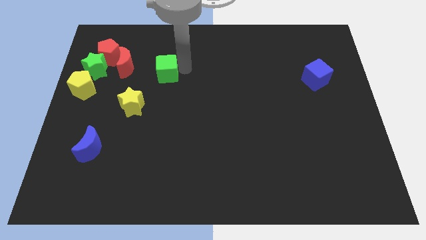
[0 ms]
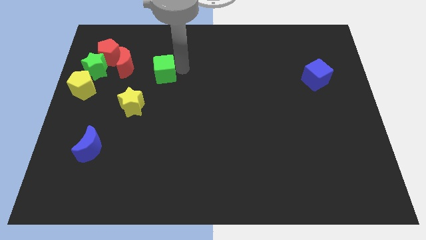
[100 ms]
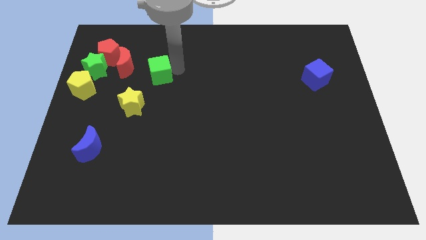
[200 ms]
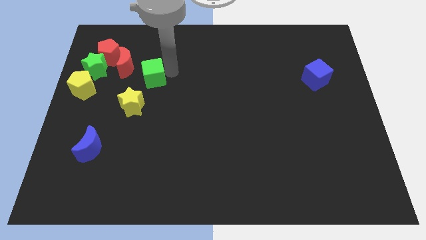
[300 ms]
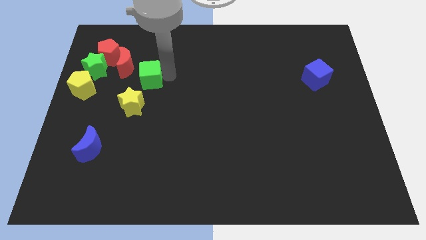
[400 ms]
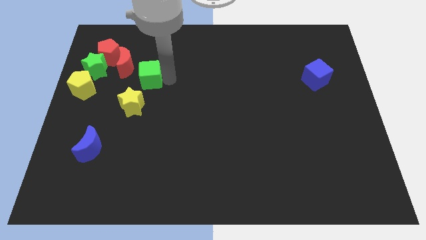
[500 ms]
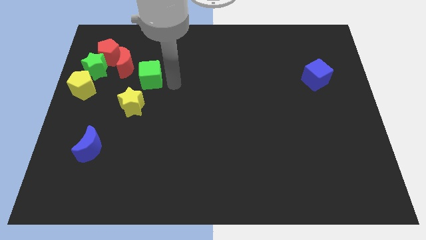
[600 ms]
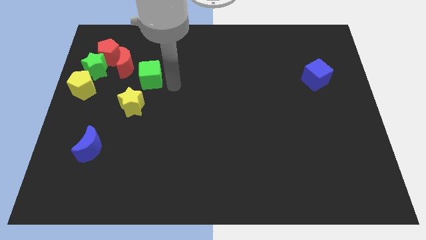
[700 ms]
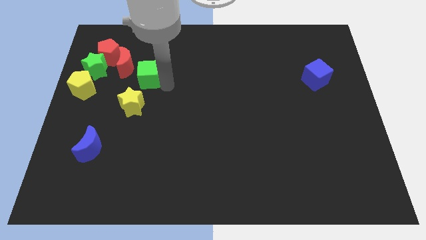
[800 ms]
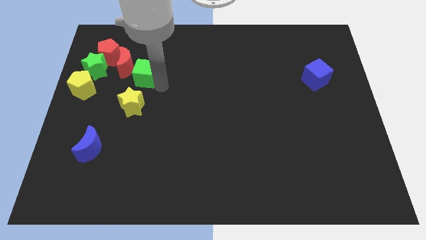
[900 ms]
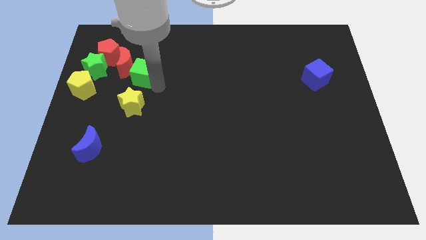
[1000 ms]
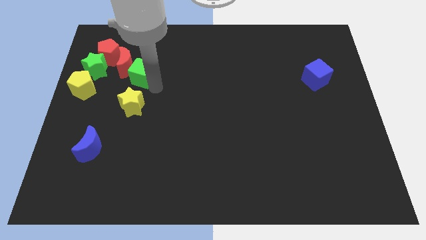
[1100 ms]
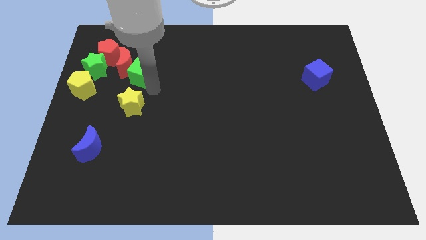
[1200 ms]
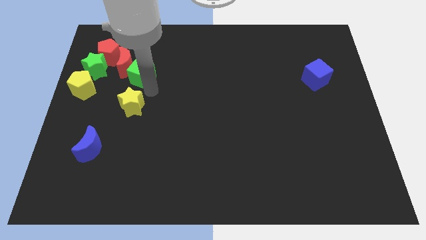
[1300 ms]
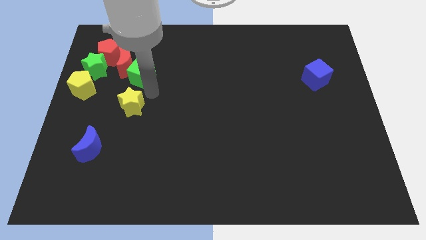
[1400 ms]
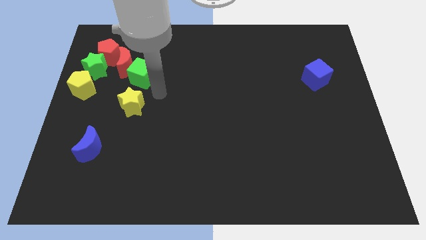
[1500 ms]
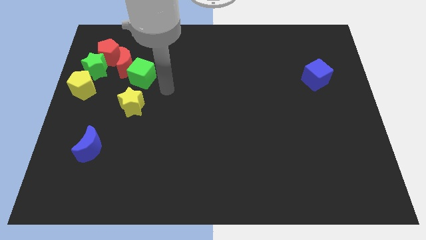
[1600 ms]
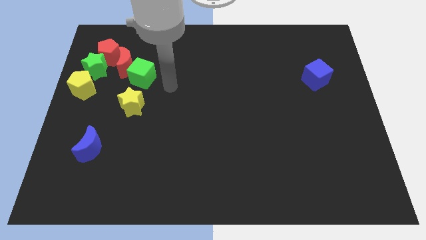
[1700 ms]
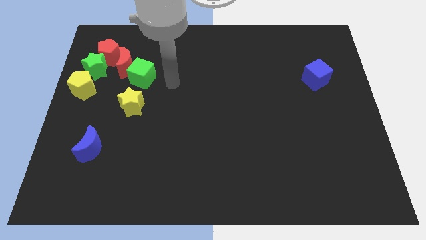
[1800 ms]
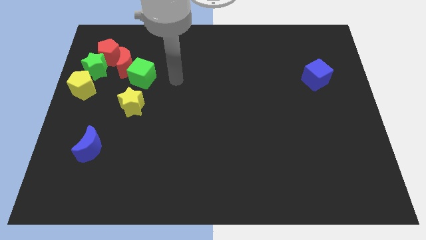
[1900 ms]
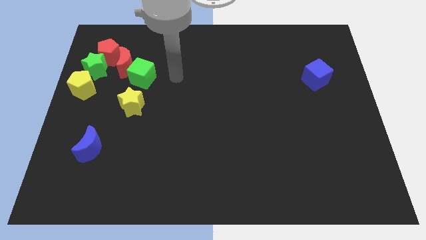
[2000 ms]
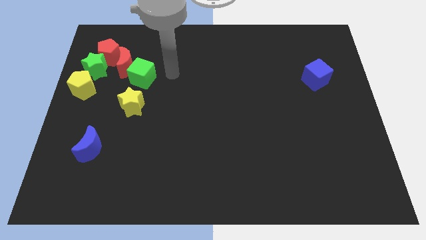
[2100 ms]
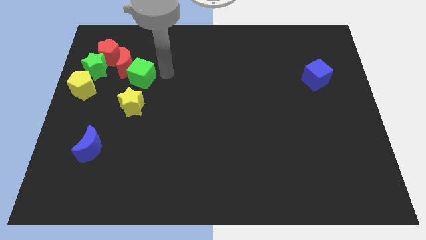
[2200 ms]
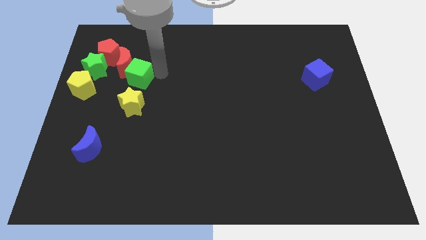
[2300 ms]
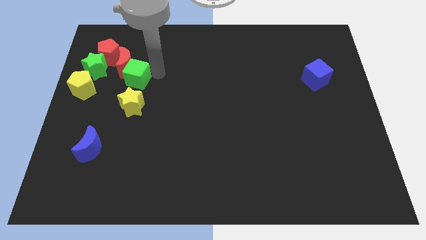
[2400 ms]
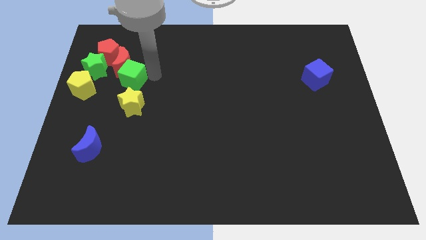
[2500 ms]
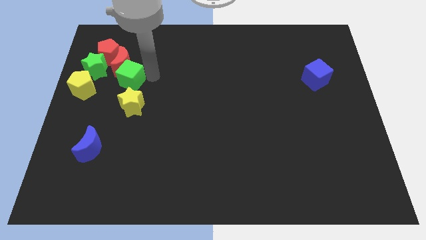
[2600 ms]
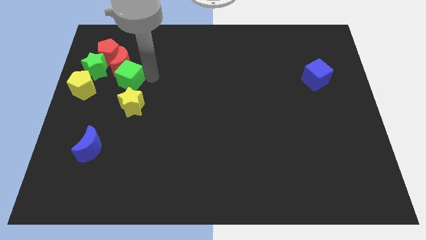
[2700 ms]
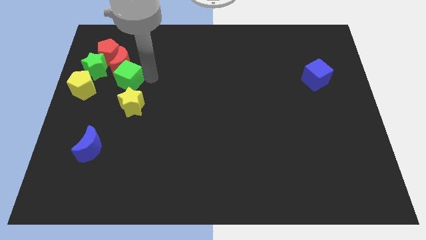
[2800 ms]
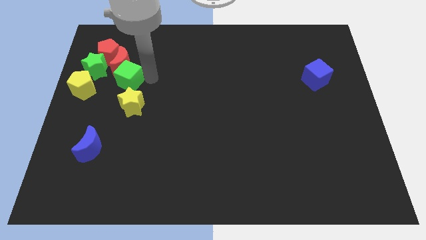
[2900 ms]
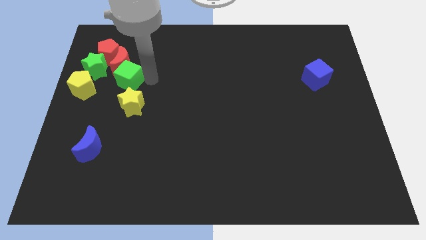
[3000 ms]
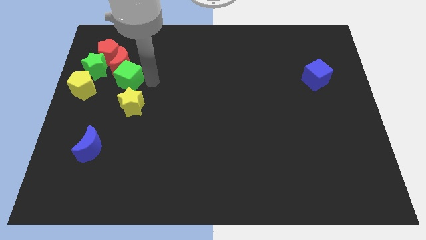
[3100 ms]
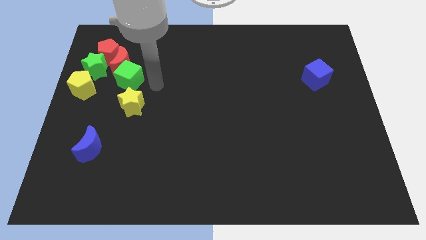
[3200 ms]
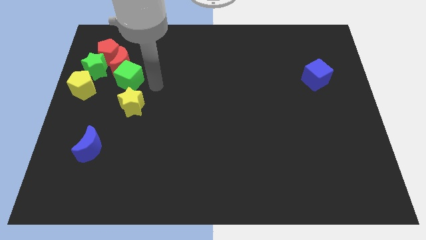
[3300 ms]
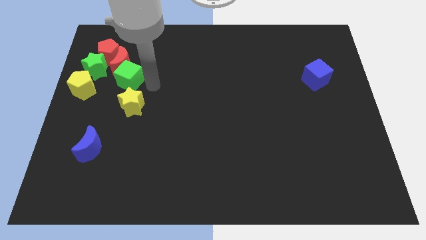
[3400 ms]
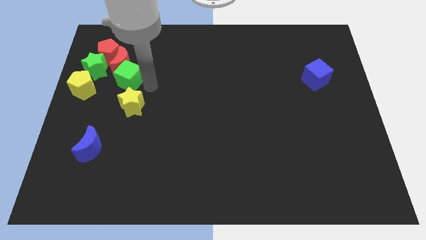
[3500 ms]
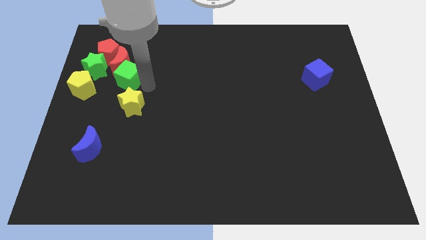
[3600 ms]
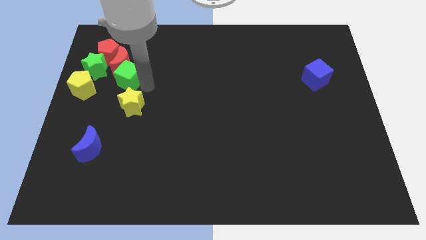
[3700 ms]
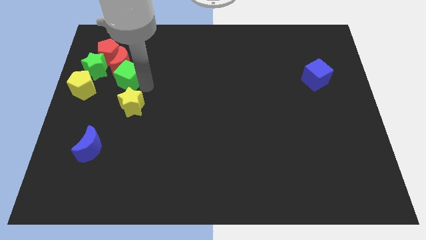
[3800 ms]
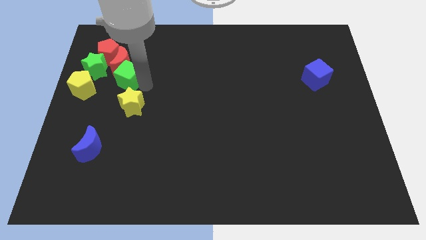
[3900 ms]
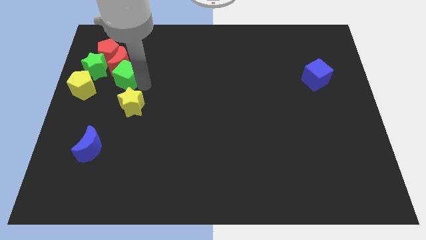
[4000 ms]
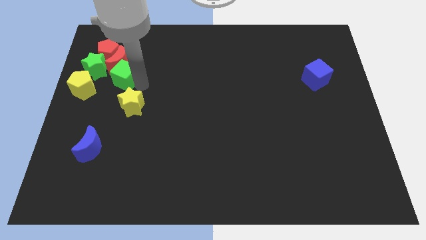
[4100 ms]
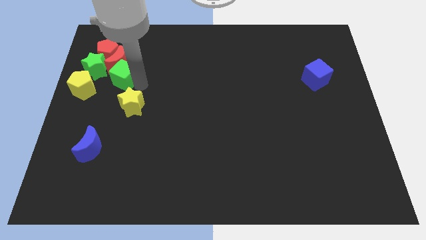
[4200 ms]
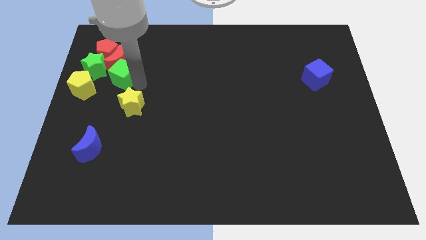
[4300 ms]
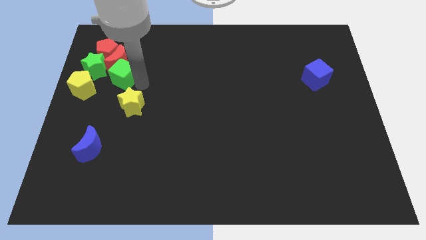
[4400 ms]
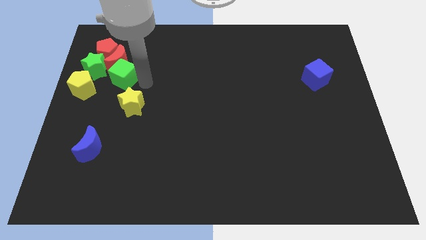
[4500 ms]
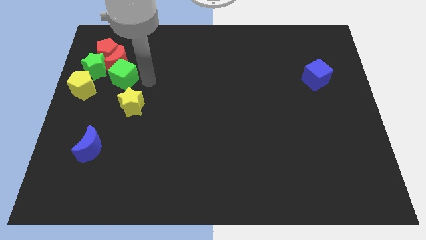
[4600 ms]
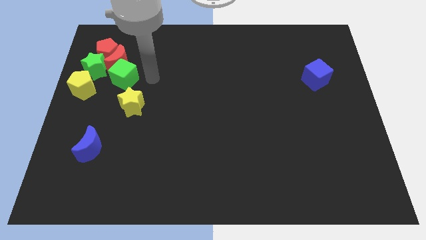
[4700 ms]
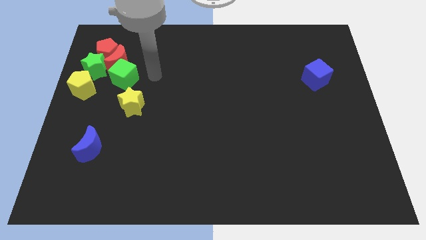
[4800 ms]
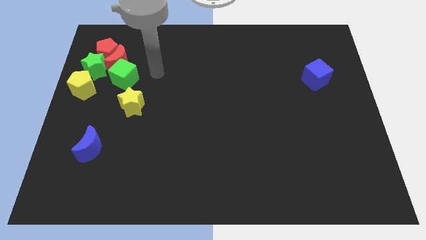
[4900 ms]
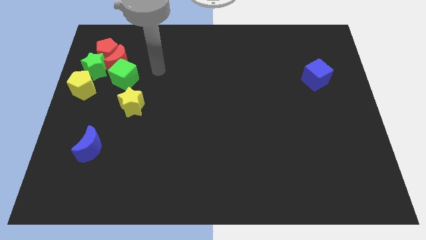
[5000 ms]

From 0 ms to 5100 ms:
push the green cube towards the down side of the red crescent

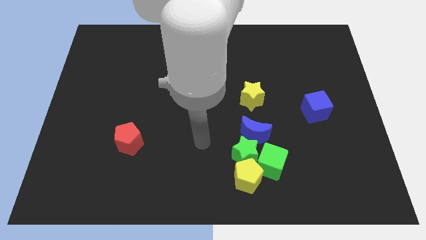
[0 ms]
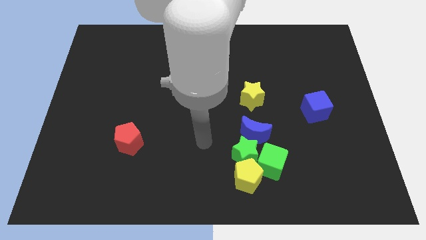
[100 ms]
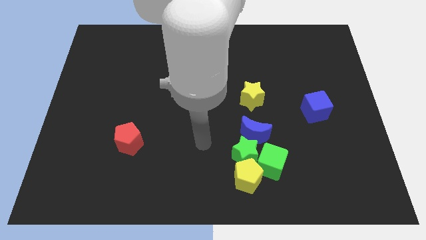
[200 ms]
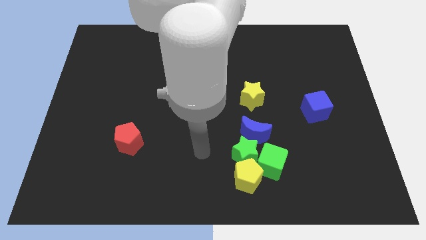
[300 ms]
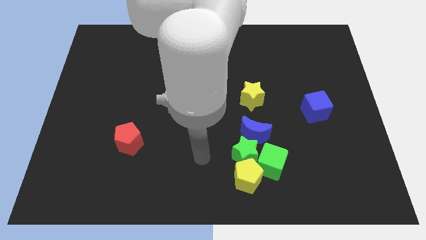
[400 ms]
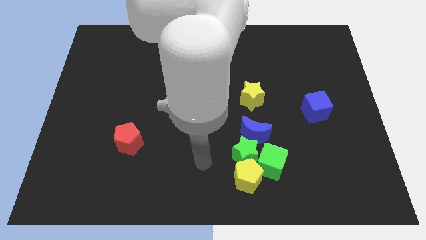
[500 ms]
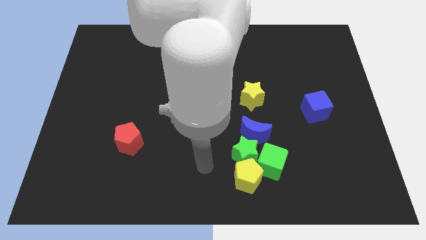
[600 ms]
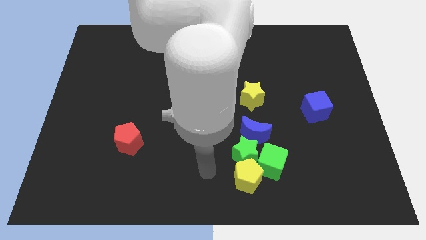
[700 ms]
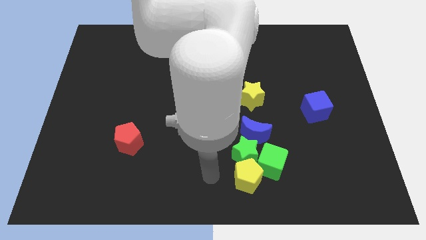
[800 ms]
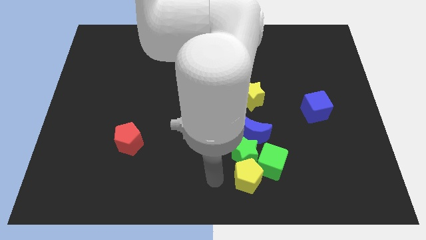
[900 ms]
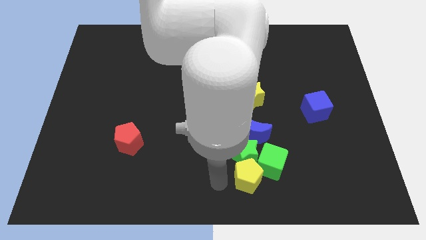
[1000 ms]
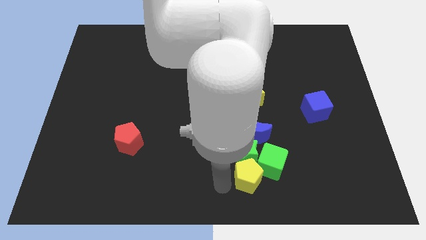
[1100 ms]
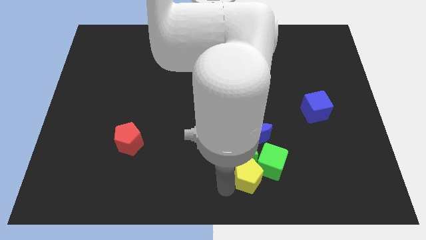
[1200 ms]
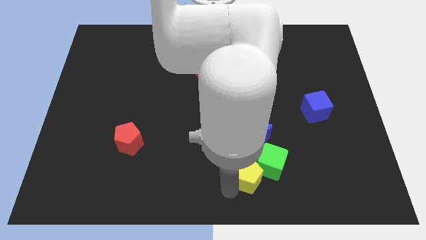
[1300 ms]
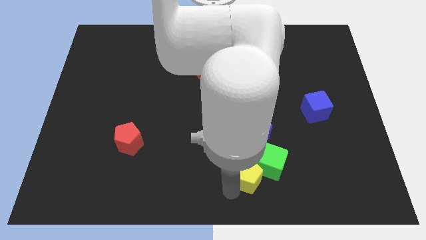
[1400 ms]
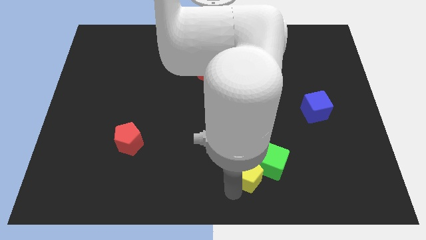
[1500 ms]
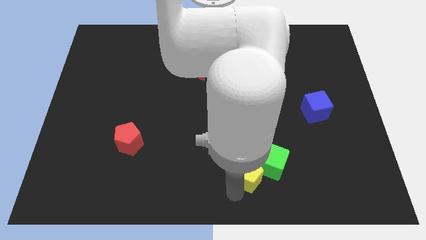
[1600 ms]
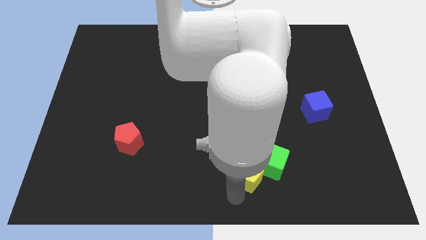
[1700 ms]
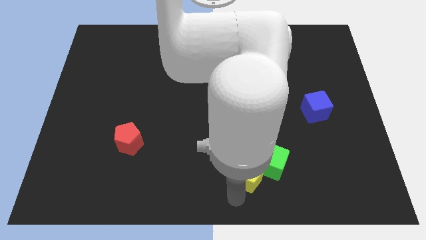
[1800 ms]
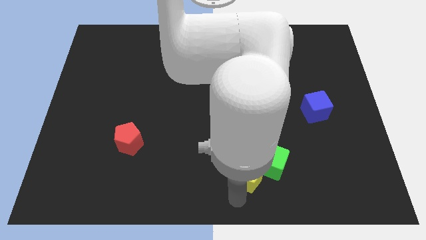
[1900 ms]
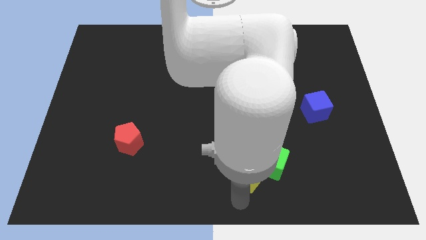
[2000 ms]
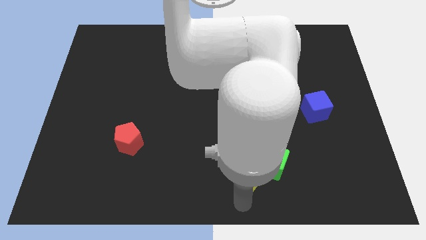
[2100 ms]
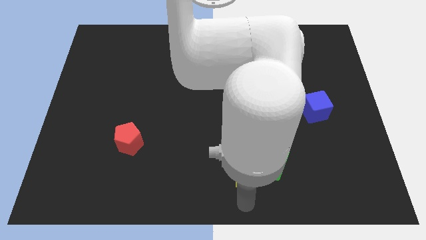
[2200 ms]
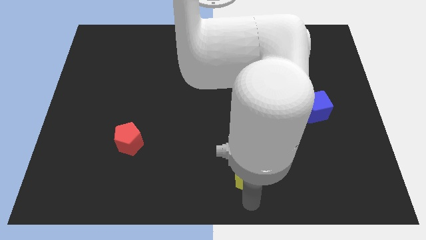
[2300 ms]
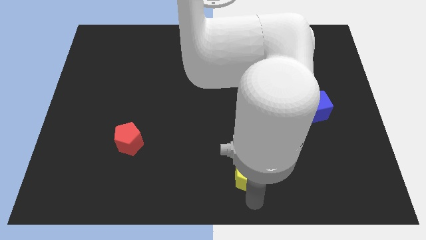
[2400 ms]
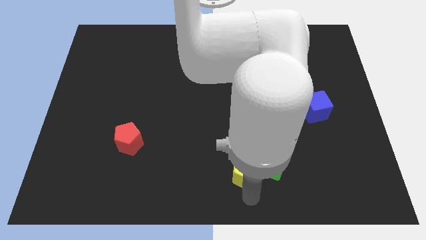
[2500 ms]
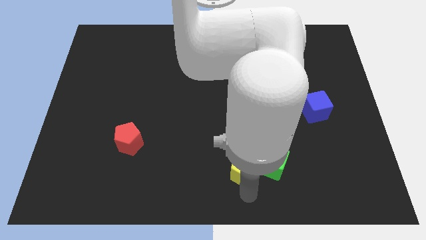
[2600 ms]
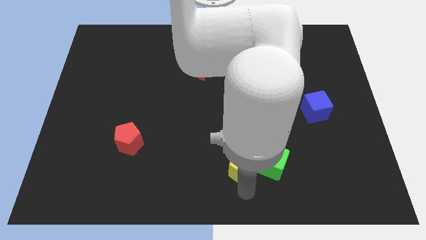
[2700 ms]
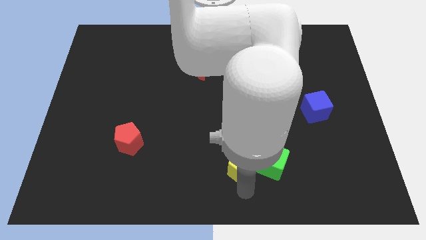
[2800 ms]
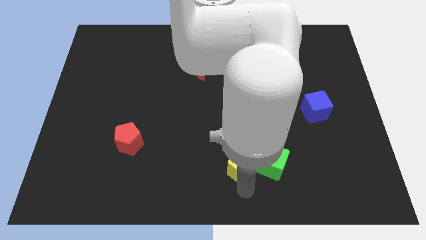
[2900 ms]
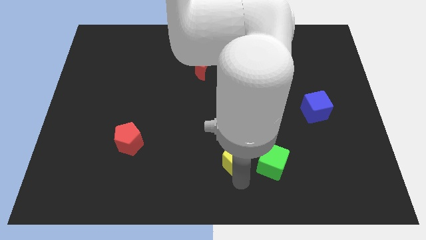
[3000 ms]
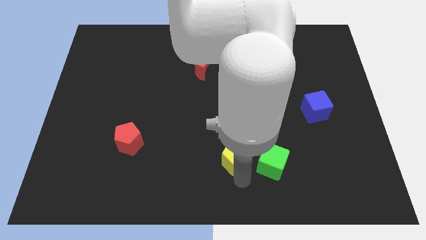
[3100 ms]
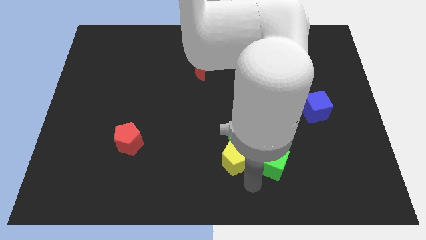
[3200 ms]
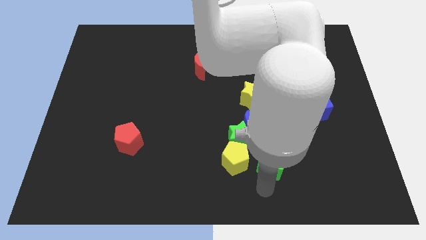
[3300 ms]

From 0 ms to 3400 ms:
push the yellow pentagon upwards slightly

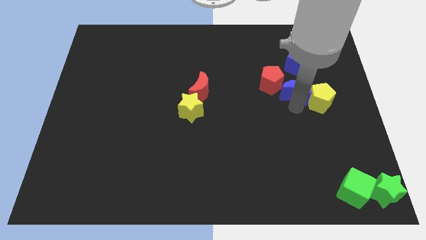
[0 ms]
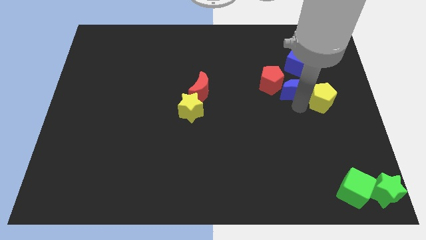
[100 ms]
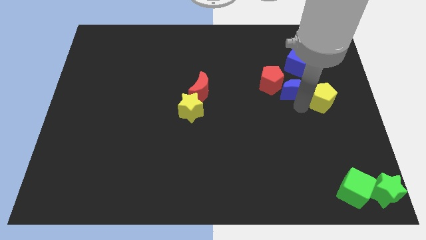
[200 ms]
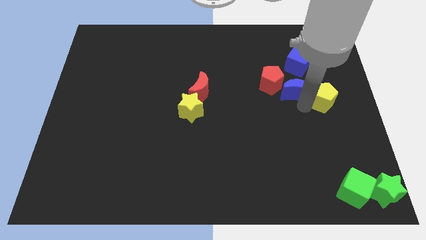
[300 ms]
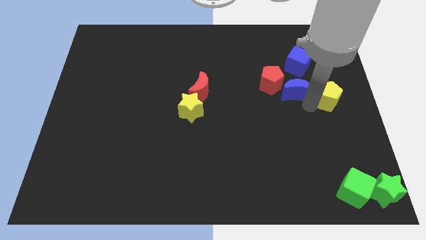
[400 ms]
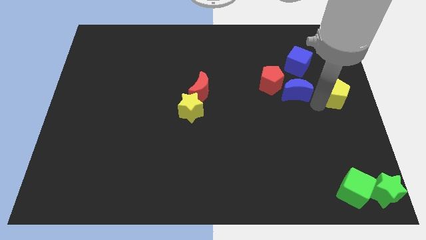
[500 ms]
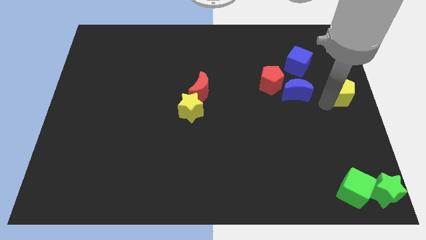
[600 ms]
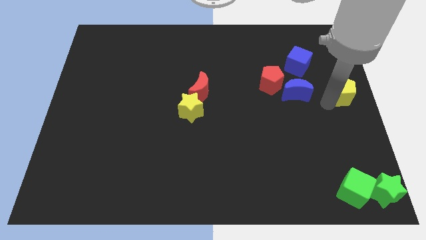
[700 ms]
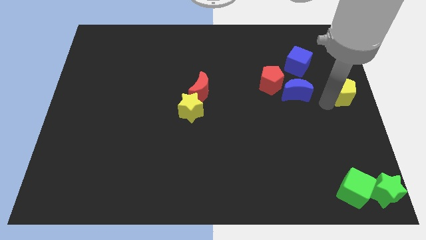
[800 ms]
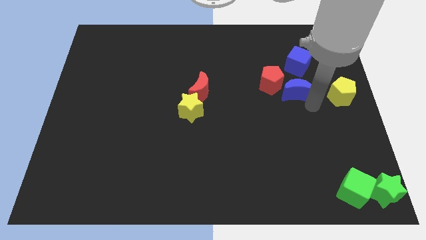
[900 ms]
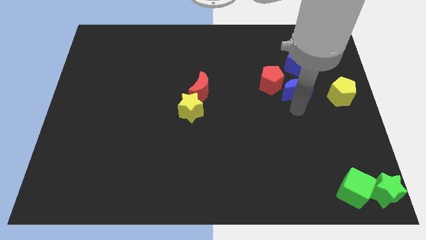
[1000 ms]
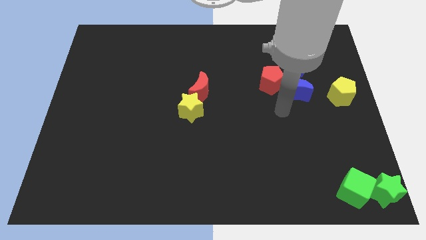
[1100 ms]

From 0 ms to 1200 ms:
separate the yellow pentagon from blue crescent
